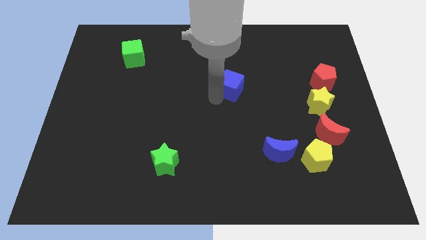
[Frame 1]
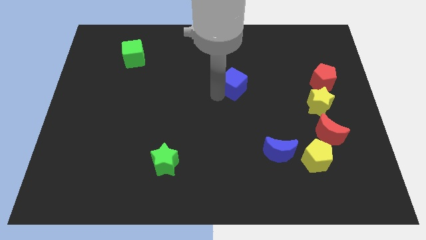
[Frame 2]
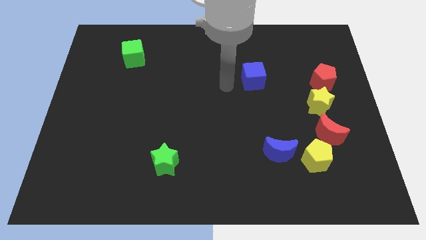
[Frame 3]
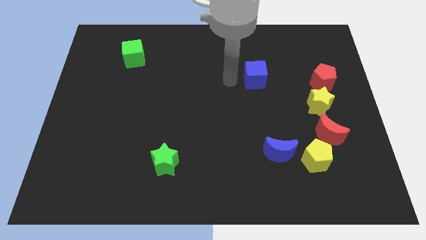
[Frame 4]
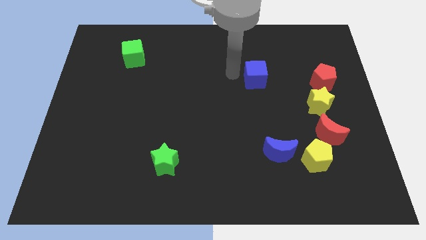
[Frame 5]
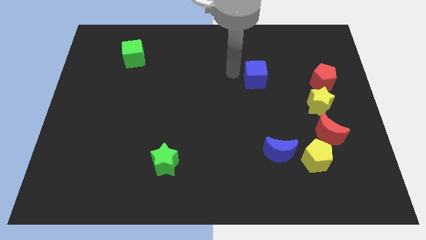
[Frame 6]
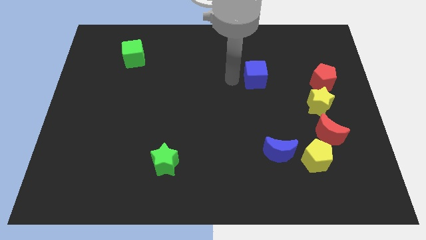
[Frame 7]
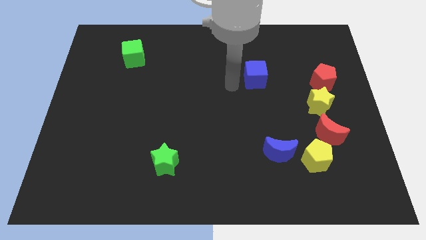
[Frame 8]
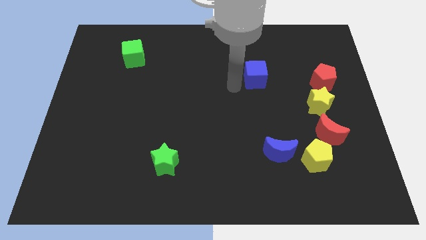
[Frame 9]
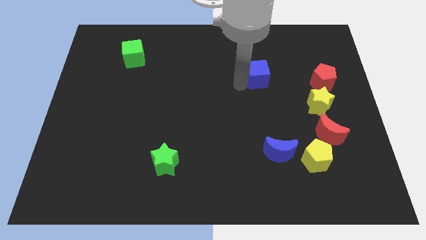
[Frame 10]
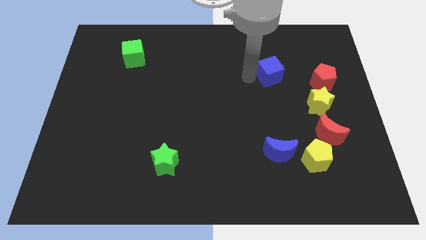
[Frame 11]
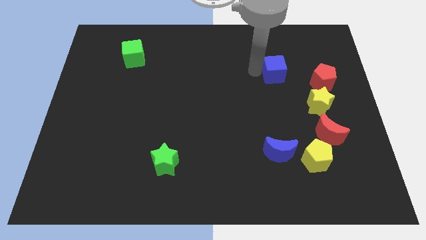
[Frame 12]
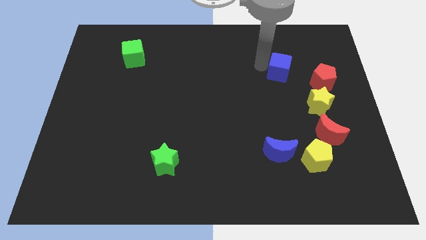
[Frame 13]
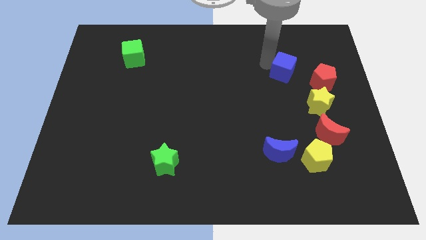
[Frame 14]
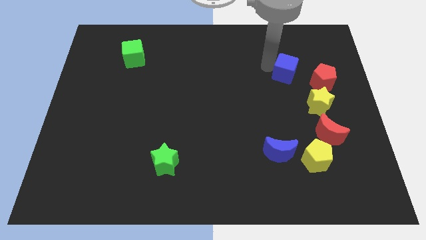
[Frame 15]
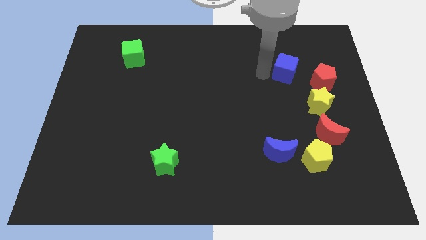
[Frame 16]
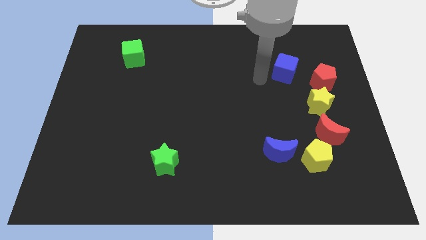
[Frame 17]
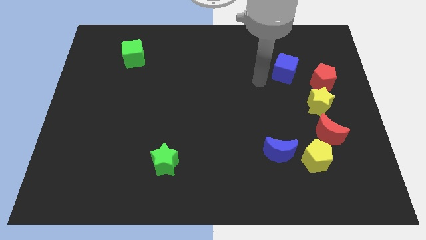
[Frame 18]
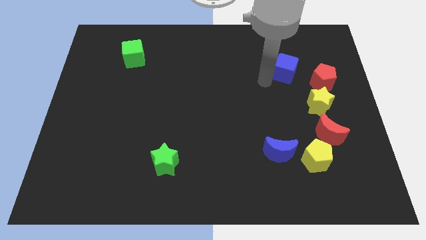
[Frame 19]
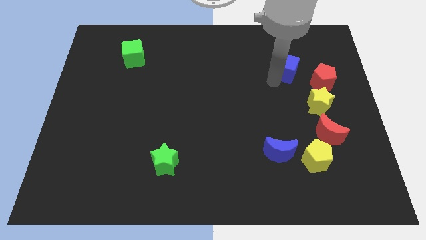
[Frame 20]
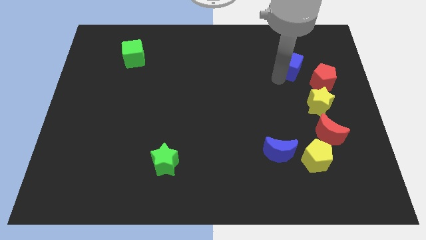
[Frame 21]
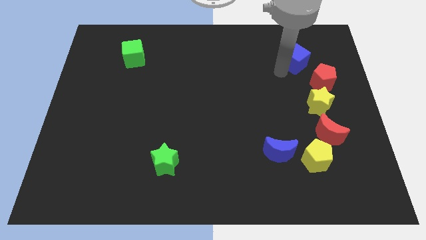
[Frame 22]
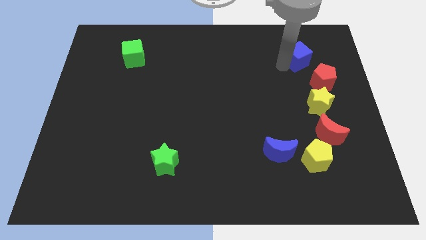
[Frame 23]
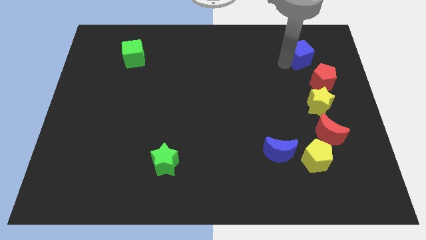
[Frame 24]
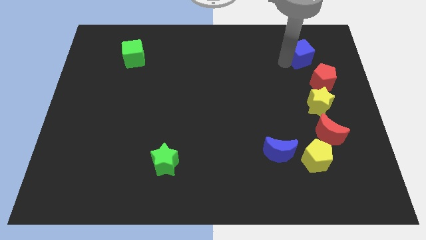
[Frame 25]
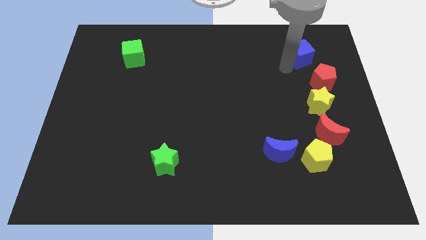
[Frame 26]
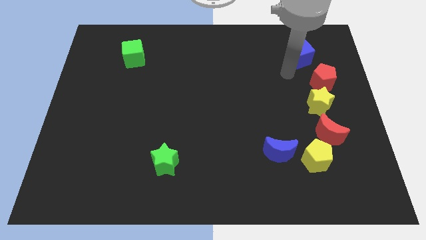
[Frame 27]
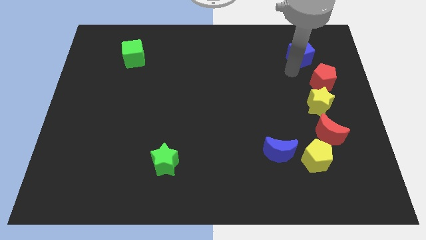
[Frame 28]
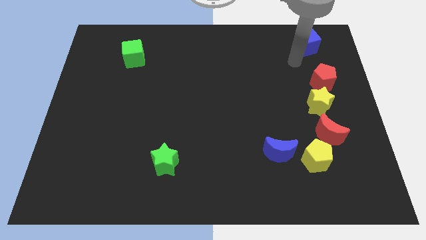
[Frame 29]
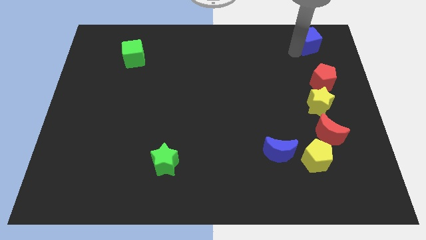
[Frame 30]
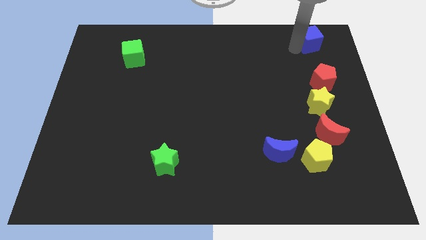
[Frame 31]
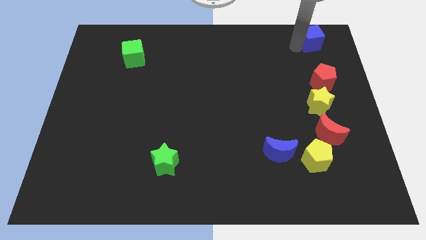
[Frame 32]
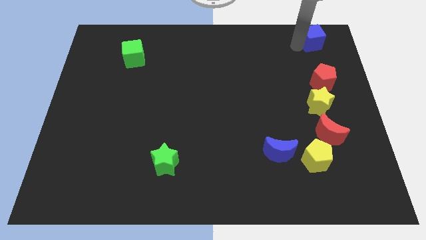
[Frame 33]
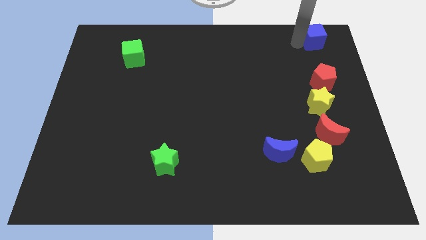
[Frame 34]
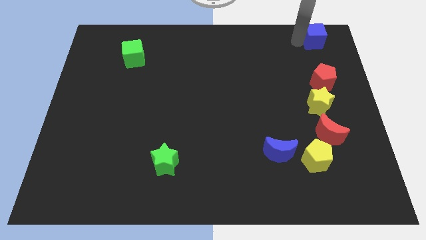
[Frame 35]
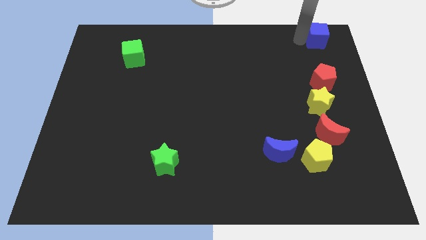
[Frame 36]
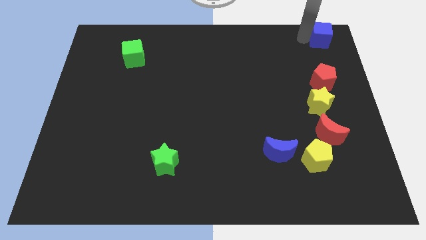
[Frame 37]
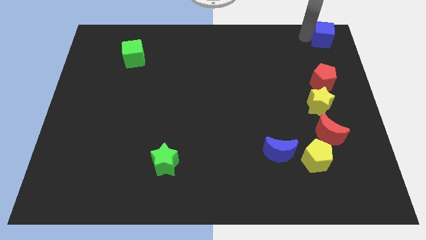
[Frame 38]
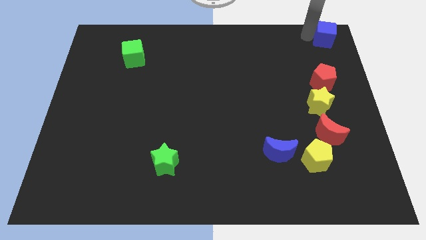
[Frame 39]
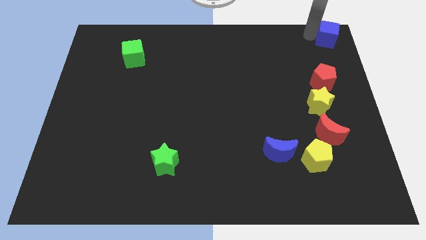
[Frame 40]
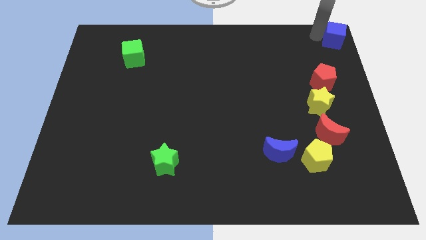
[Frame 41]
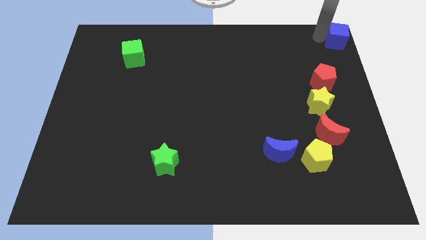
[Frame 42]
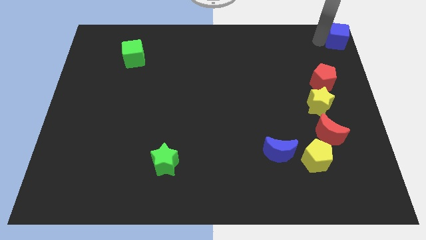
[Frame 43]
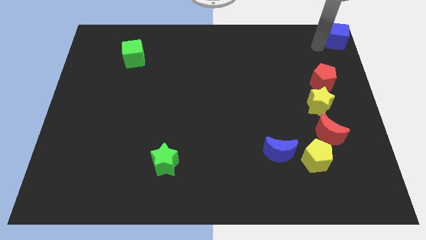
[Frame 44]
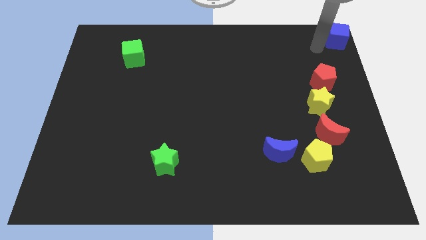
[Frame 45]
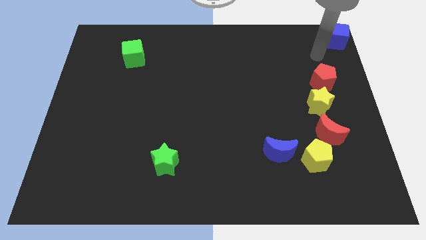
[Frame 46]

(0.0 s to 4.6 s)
push the blue cube to the top right corner of the board

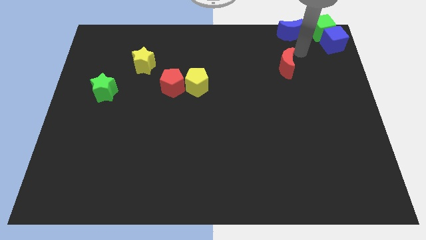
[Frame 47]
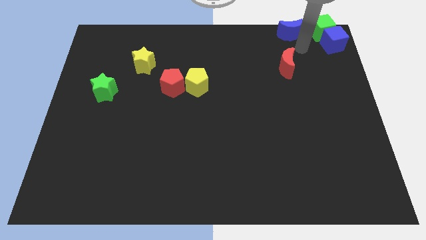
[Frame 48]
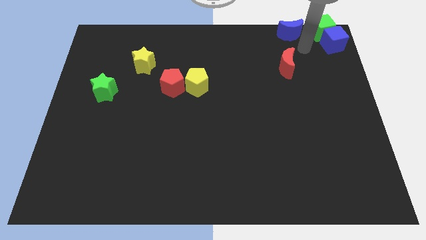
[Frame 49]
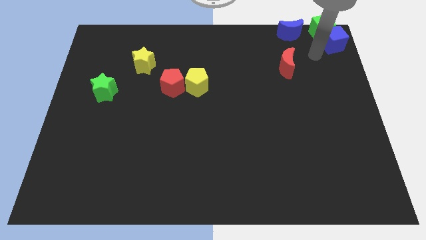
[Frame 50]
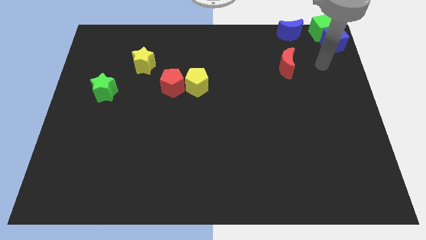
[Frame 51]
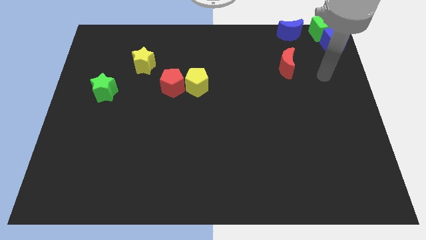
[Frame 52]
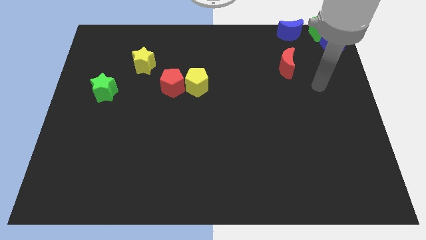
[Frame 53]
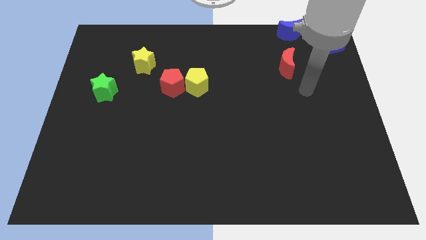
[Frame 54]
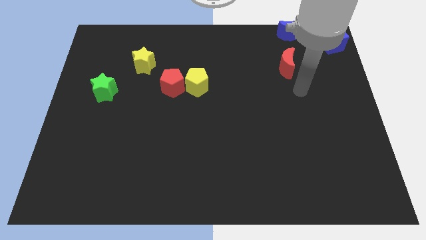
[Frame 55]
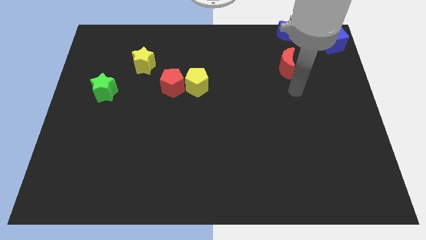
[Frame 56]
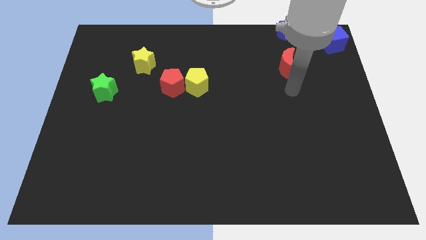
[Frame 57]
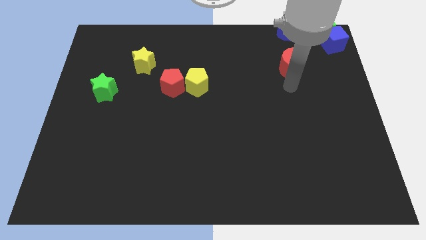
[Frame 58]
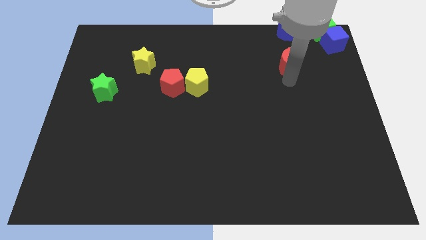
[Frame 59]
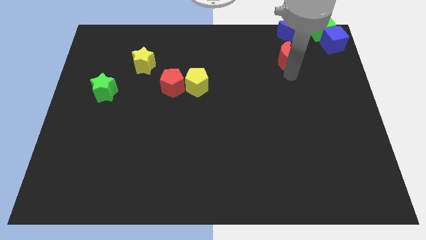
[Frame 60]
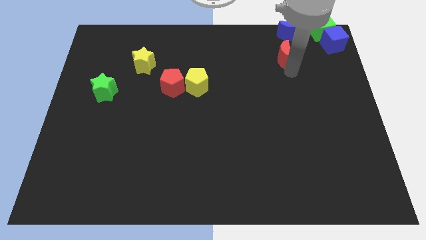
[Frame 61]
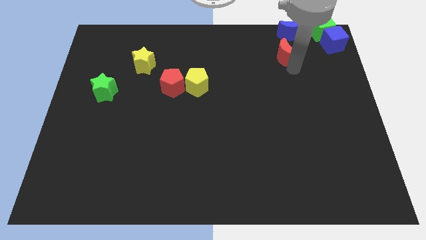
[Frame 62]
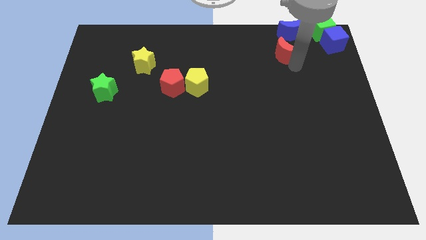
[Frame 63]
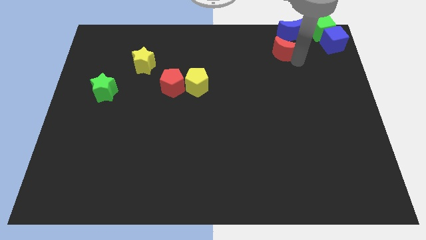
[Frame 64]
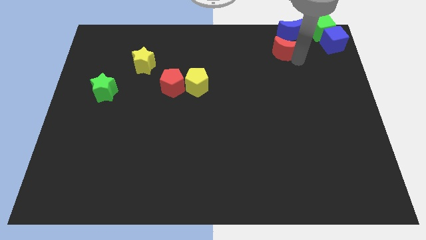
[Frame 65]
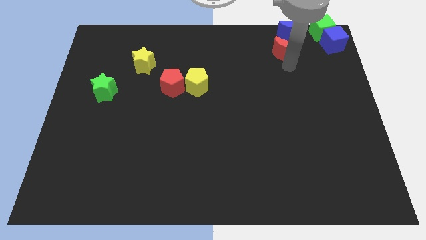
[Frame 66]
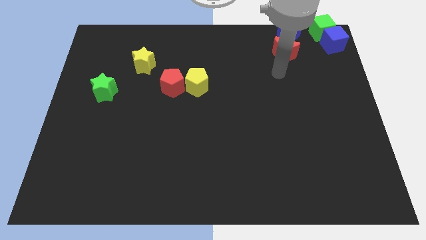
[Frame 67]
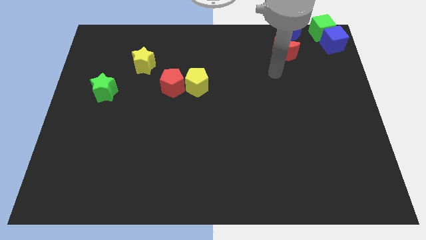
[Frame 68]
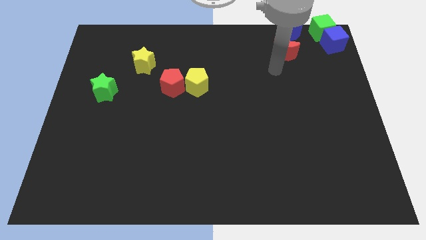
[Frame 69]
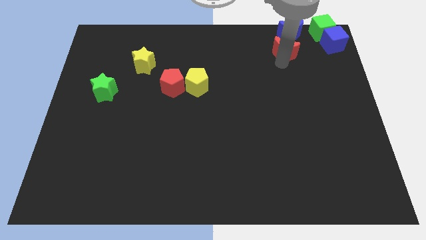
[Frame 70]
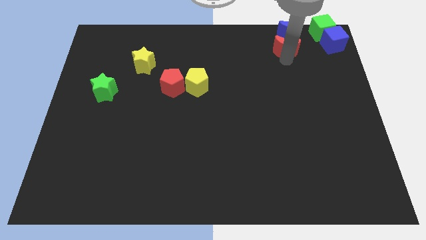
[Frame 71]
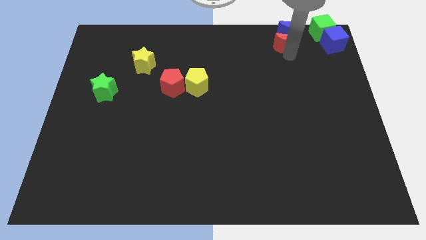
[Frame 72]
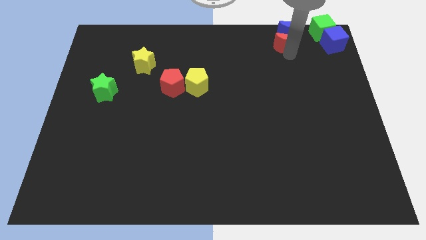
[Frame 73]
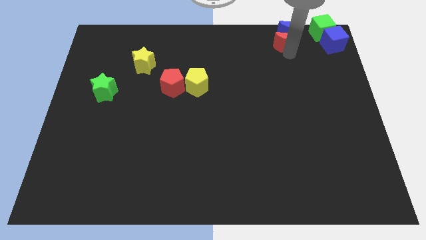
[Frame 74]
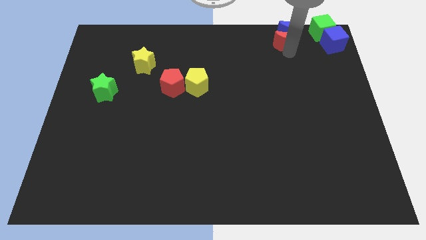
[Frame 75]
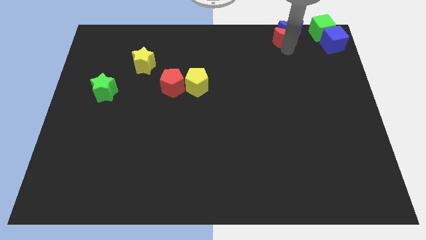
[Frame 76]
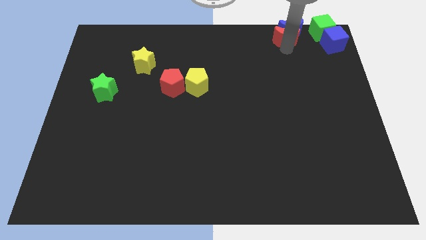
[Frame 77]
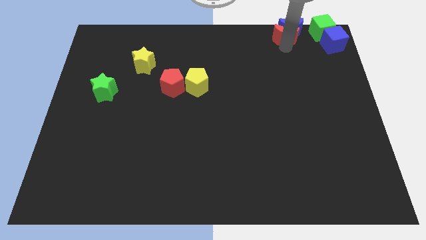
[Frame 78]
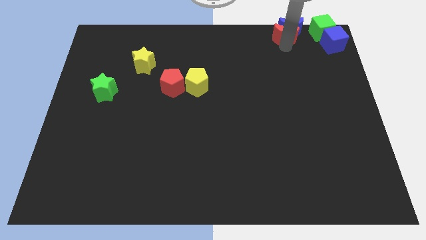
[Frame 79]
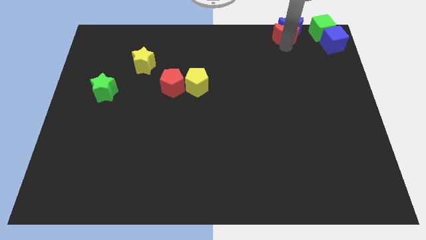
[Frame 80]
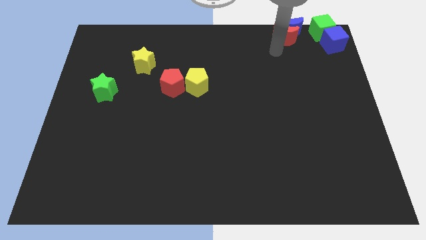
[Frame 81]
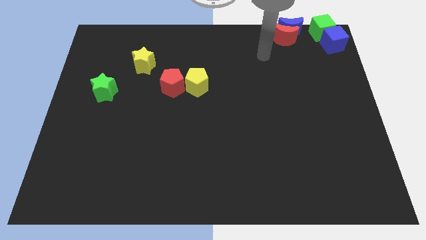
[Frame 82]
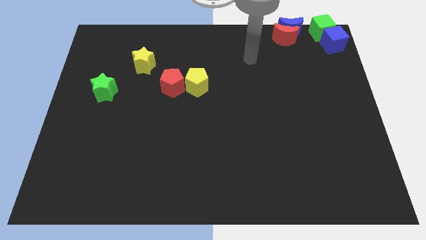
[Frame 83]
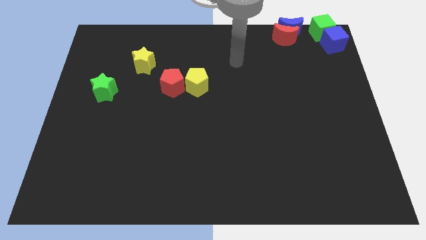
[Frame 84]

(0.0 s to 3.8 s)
put red crescent at the bottom of blue crescent

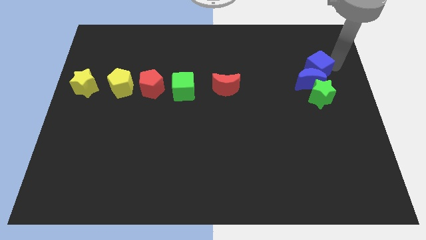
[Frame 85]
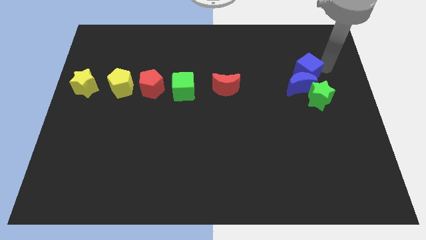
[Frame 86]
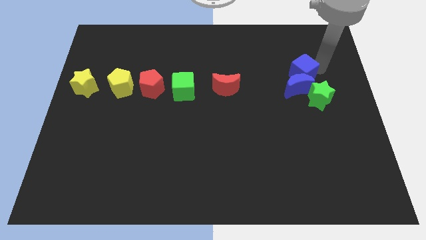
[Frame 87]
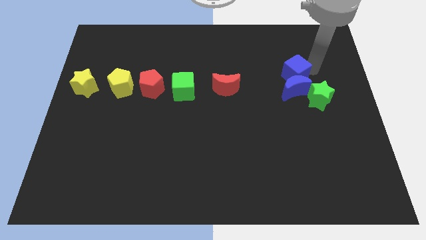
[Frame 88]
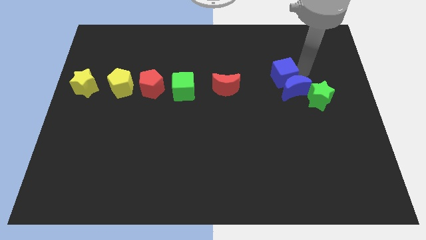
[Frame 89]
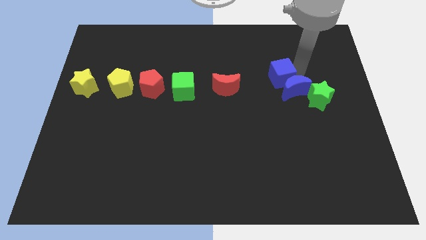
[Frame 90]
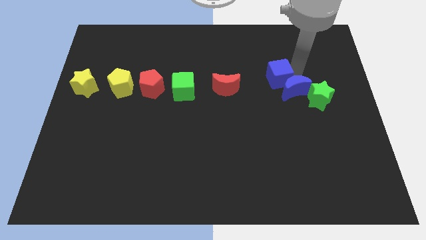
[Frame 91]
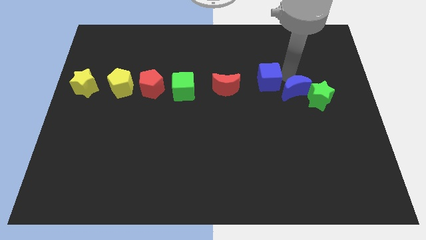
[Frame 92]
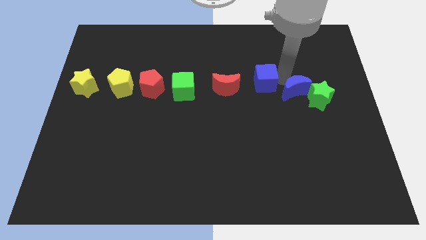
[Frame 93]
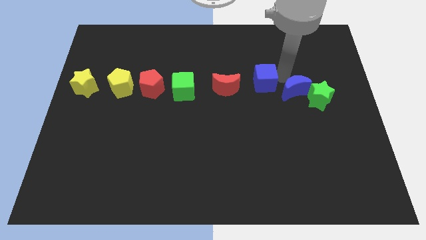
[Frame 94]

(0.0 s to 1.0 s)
move the blue cube to the left of the board
